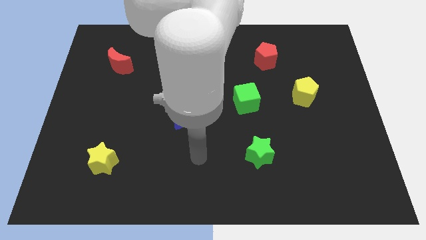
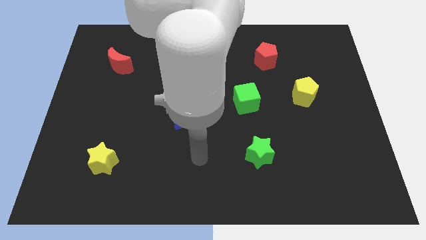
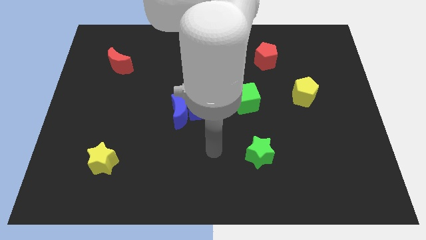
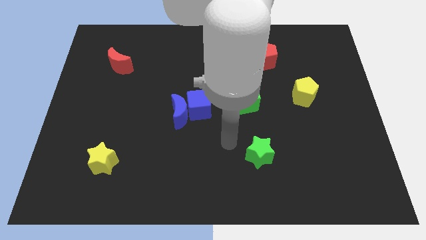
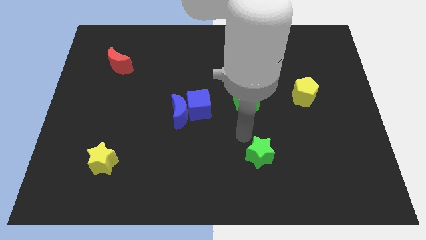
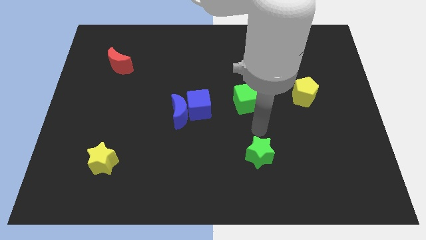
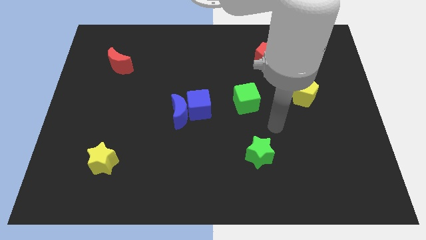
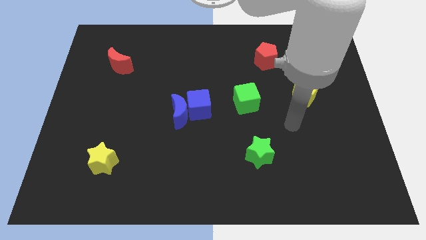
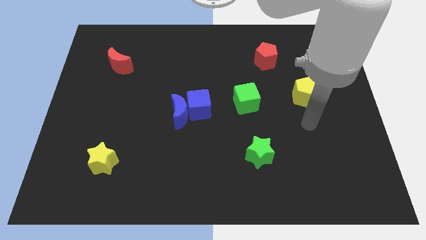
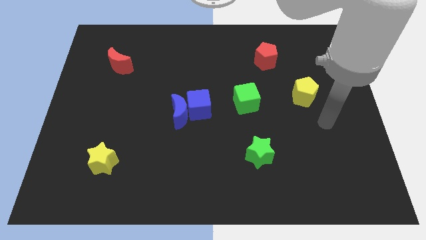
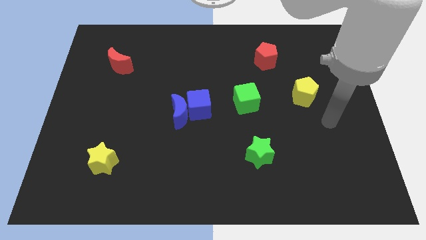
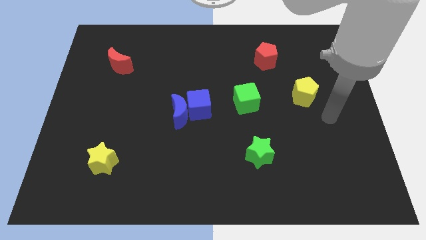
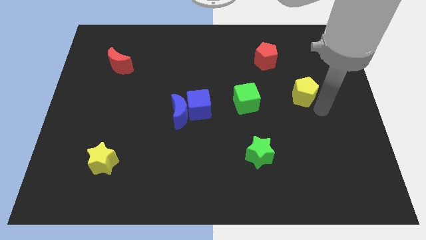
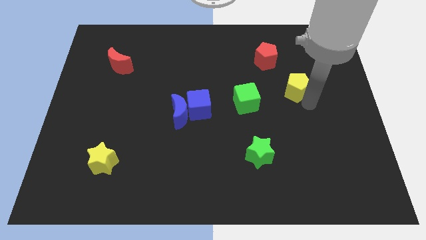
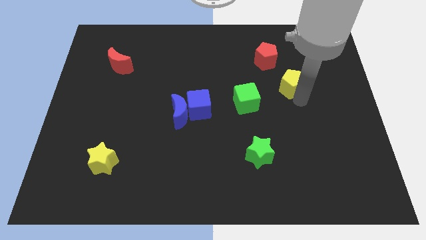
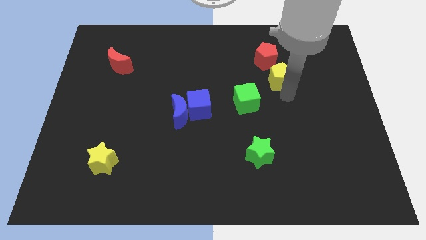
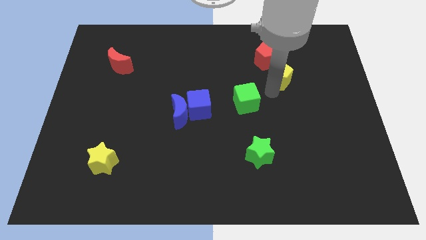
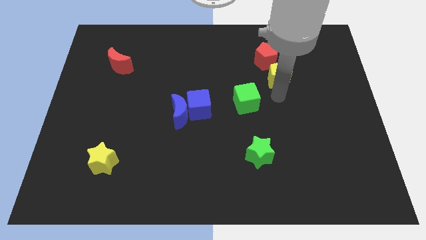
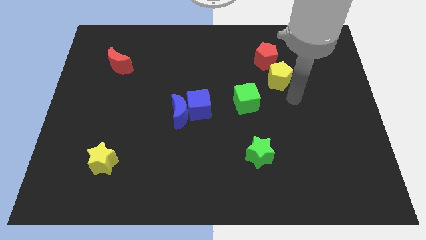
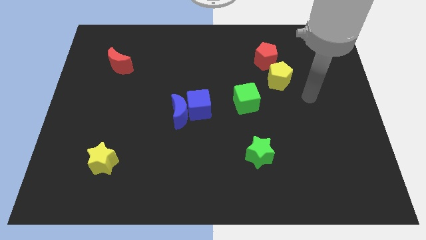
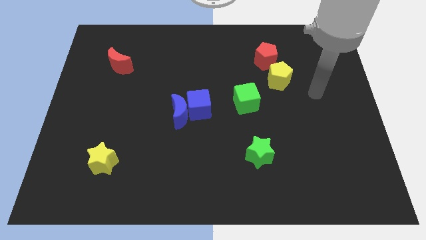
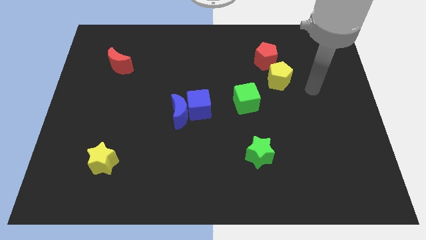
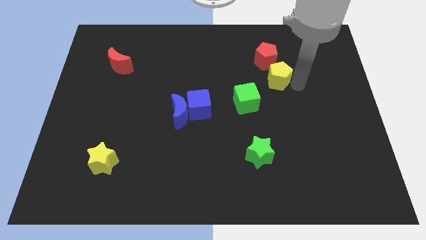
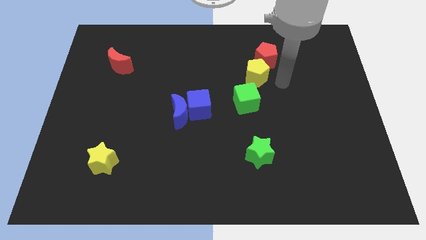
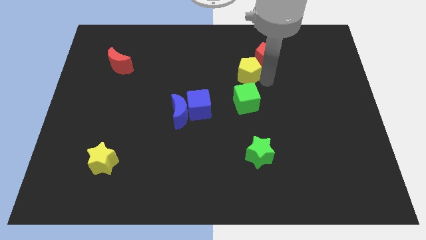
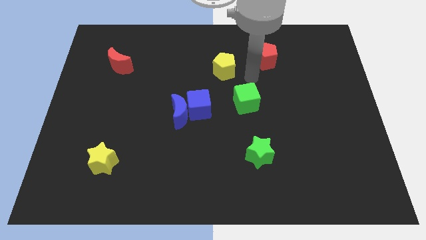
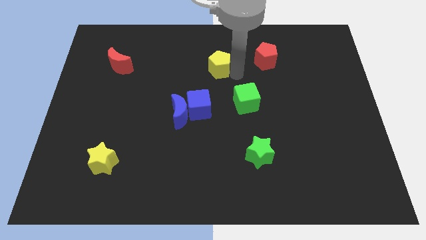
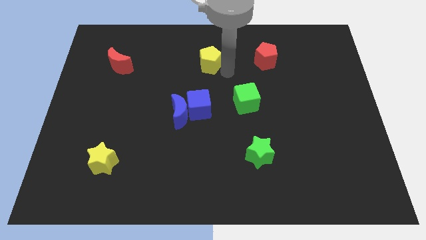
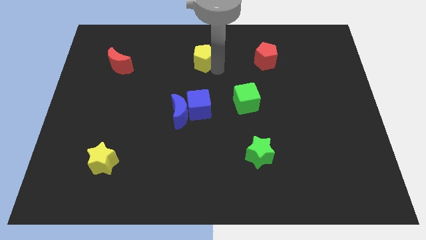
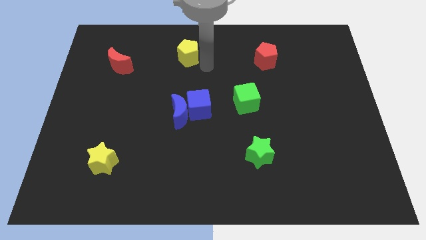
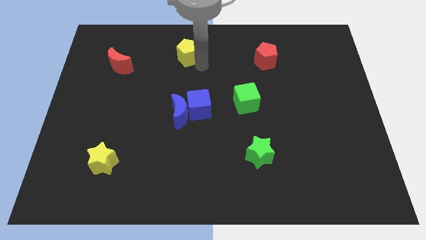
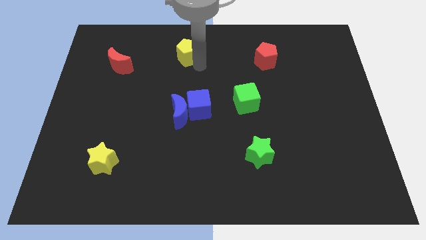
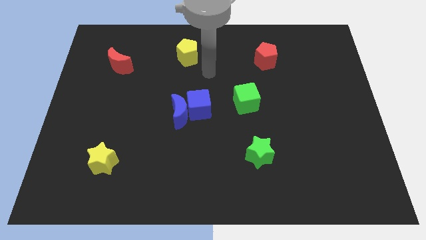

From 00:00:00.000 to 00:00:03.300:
move the yellow pentagon to the top side of the table

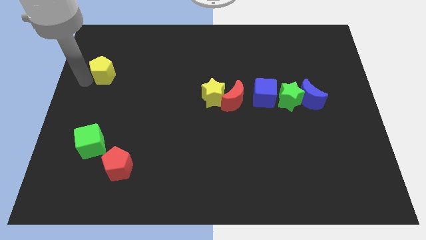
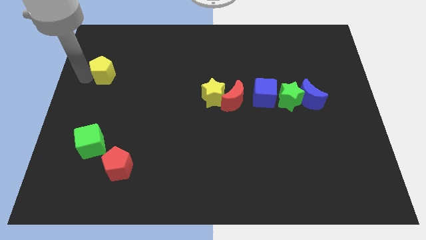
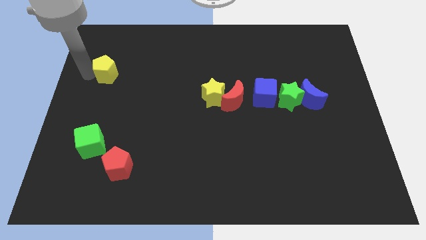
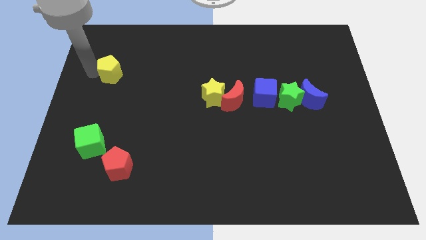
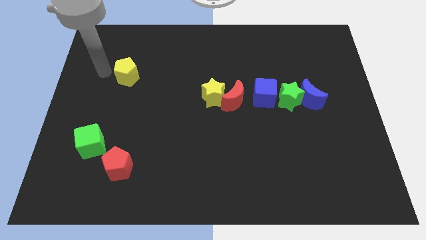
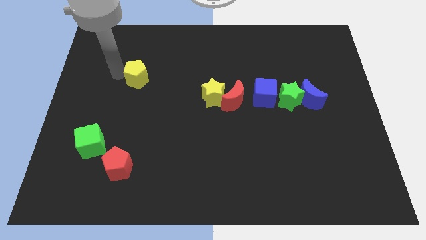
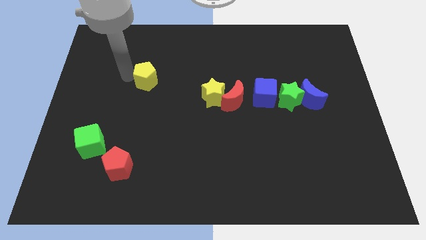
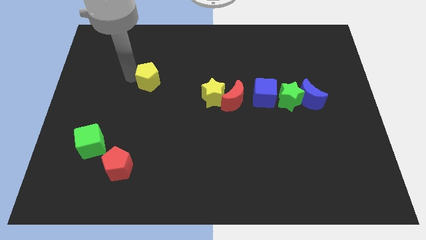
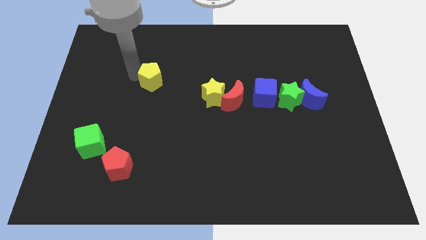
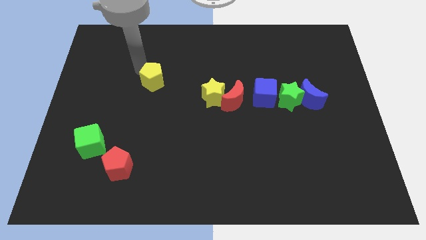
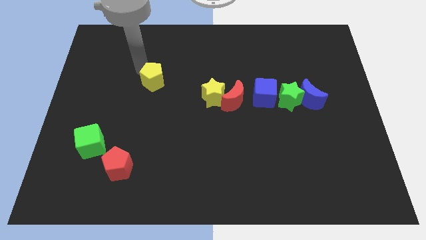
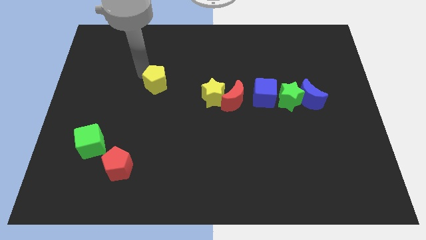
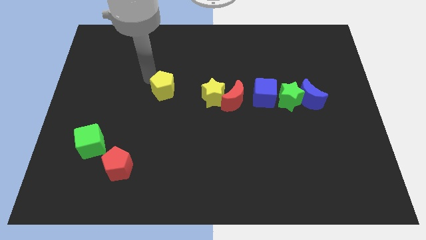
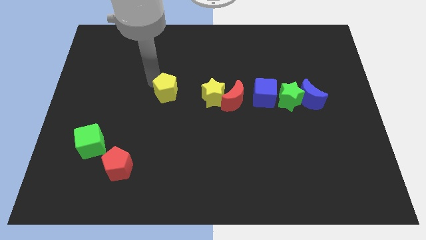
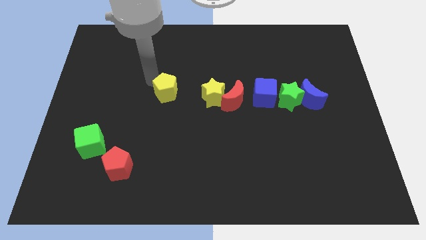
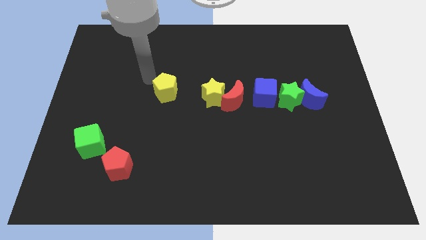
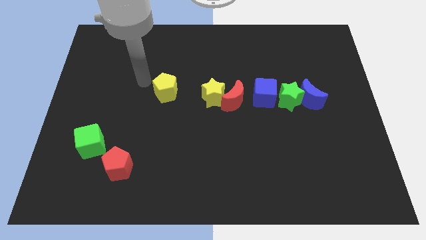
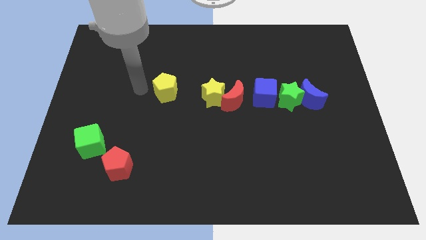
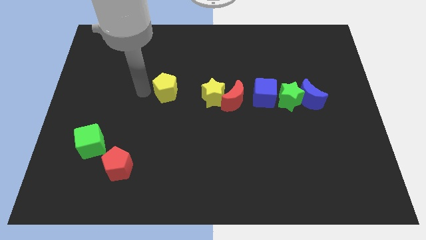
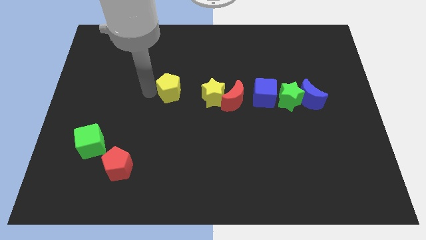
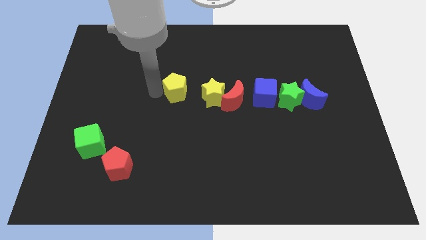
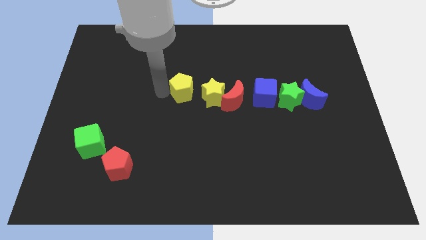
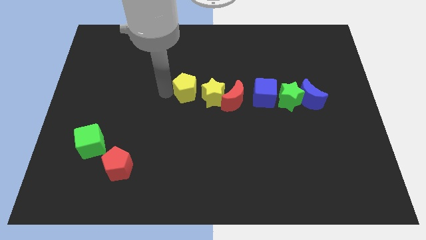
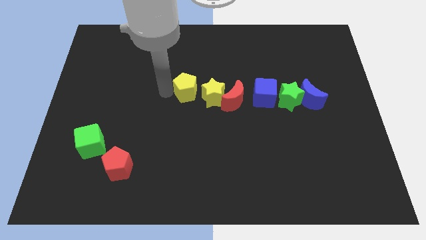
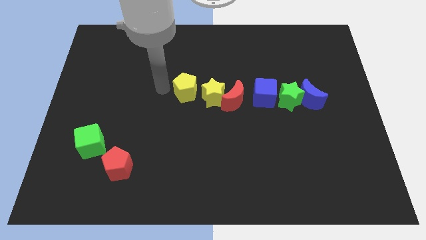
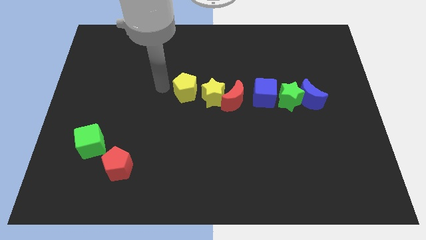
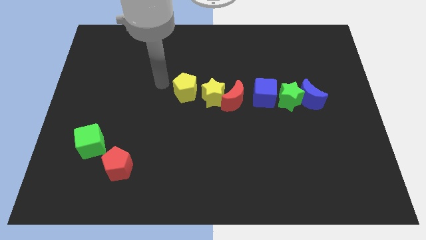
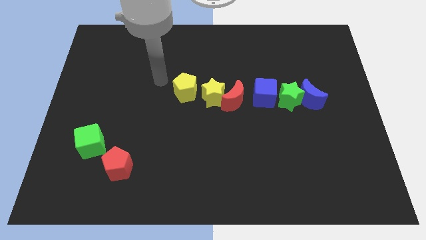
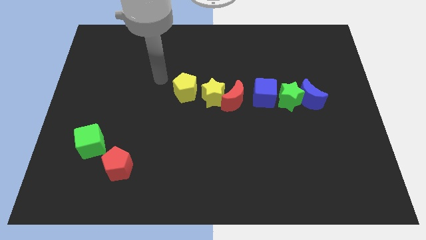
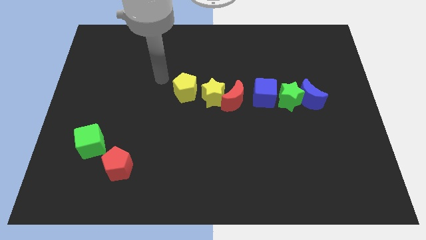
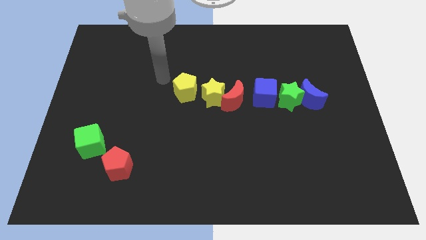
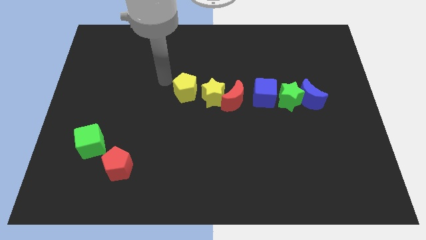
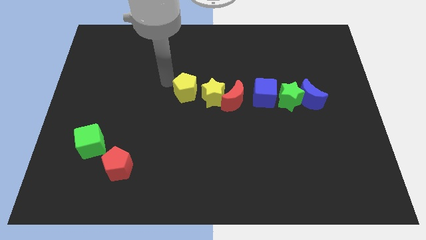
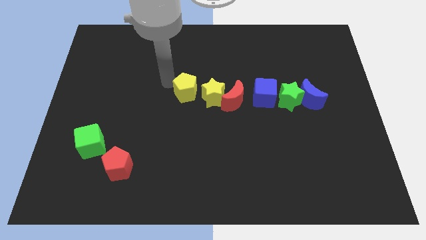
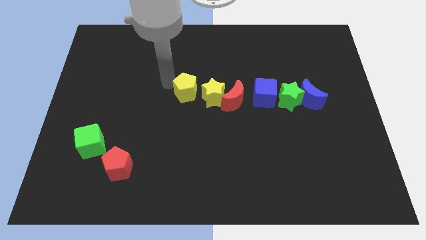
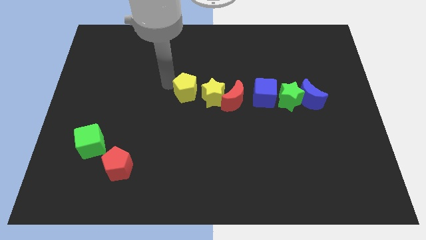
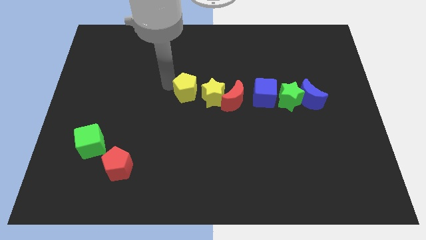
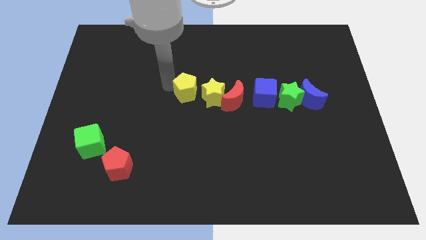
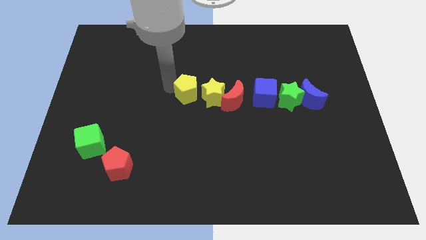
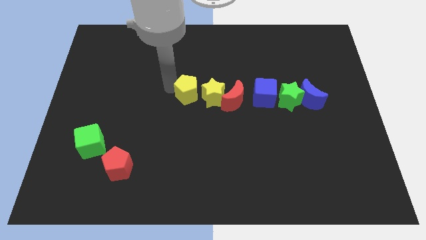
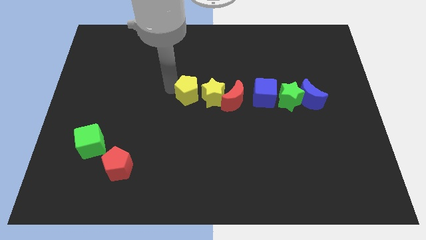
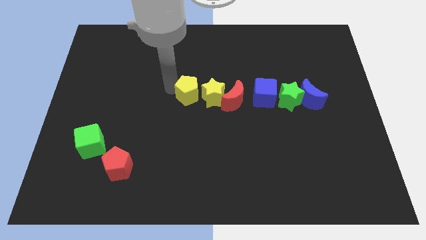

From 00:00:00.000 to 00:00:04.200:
move the yellow pentagon left to the yellow star

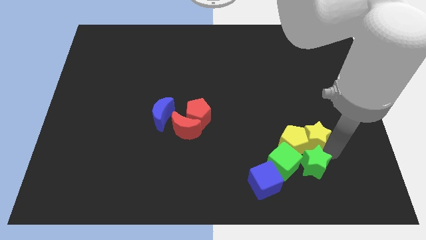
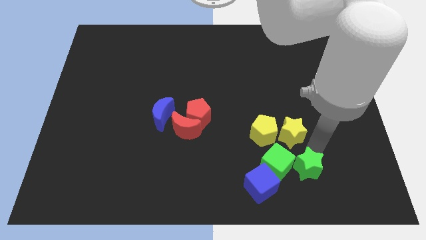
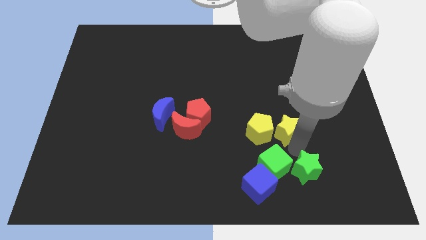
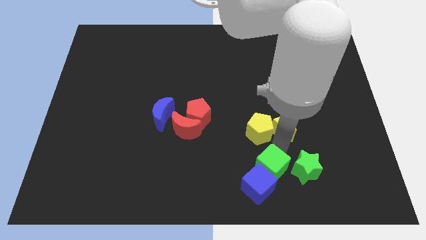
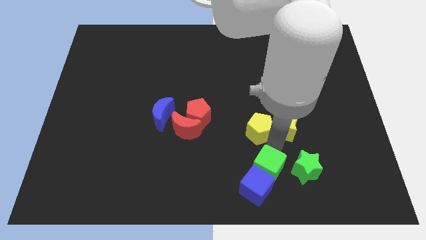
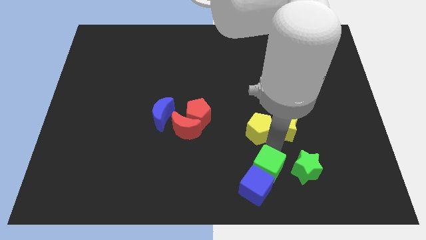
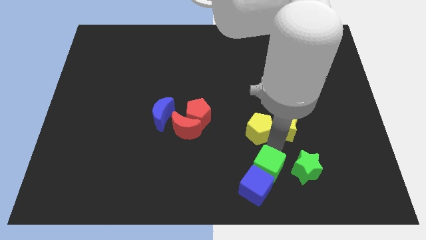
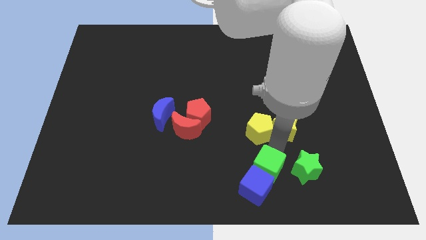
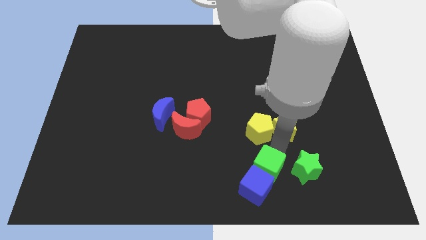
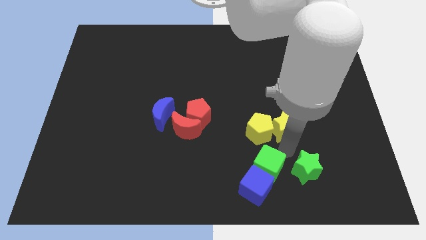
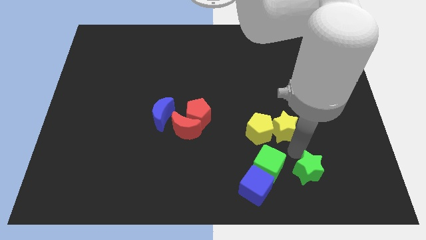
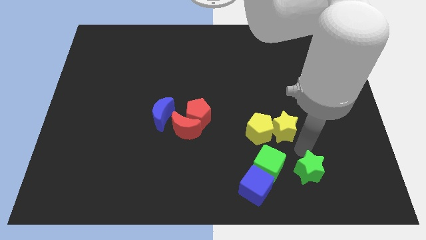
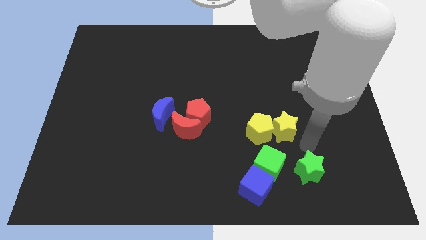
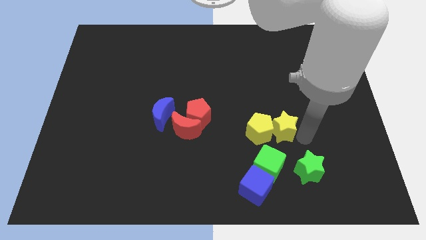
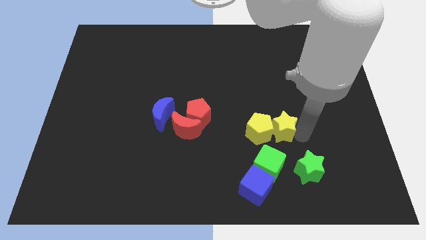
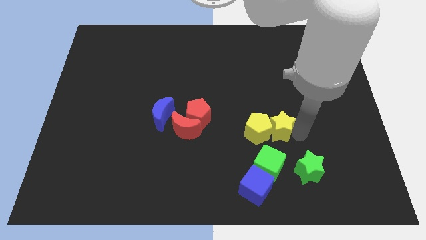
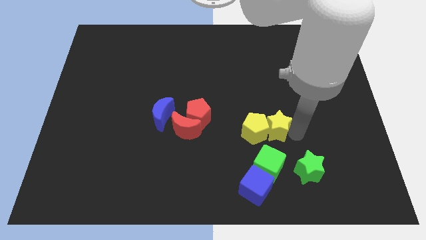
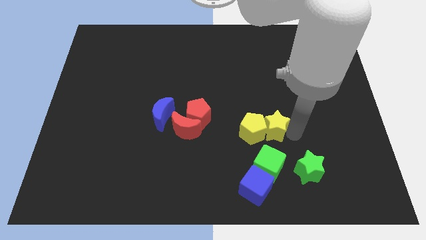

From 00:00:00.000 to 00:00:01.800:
separate the yellow pentagonyellow star from green cube
